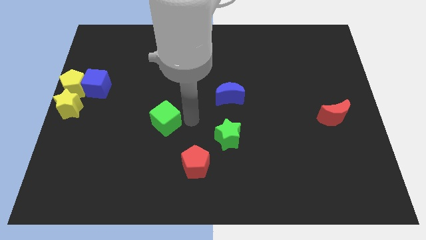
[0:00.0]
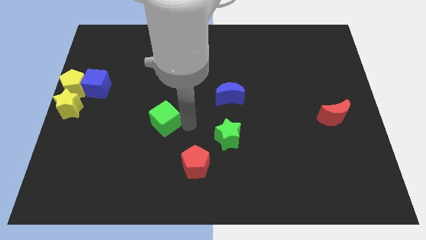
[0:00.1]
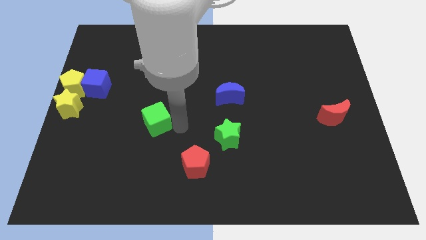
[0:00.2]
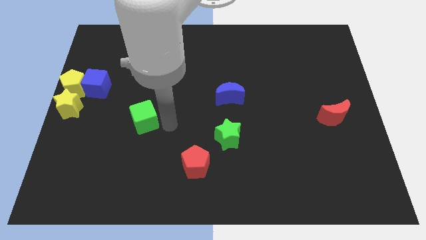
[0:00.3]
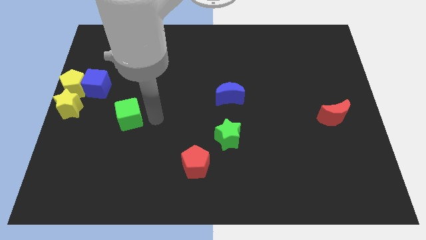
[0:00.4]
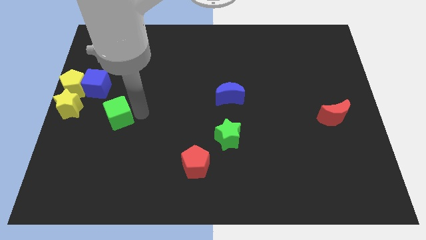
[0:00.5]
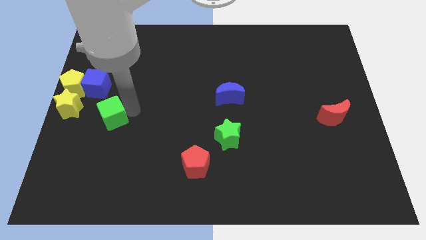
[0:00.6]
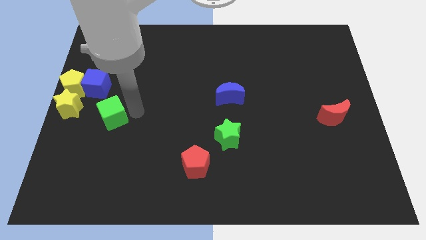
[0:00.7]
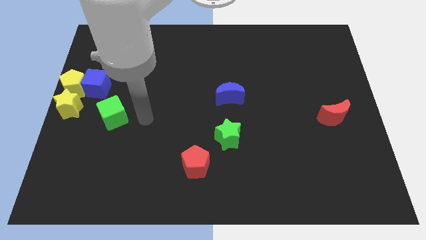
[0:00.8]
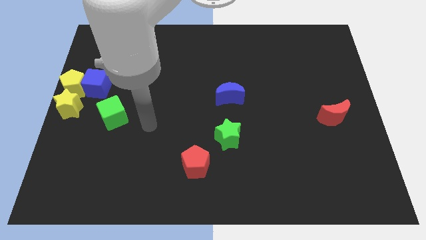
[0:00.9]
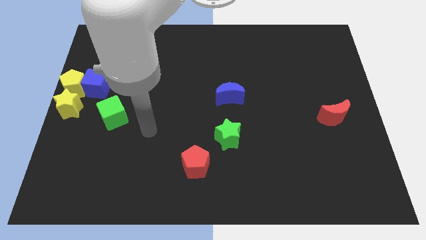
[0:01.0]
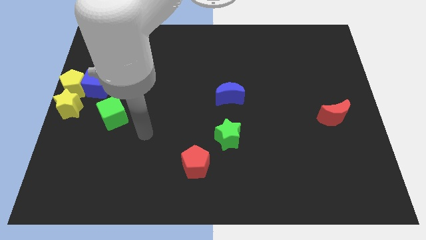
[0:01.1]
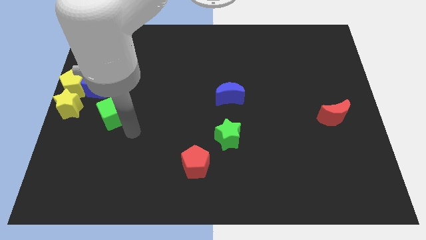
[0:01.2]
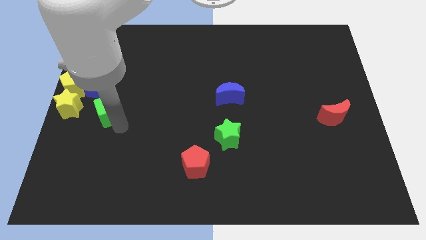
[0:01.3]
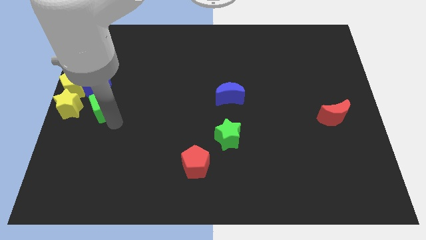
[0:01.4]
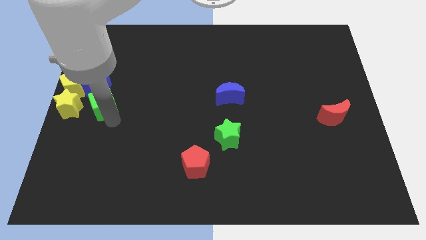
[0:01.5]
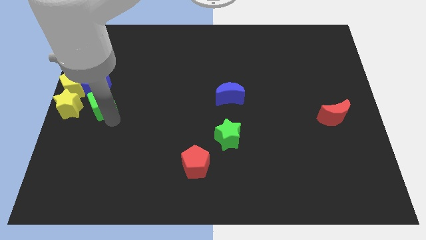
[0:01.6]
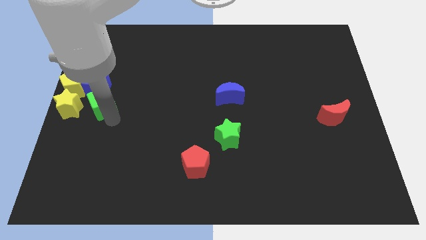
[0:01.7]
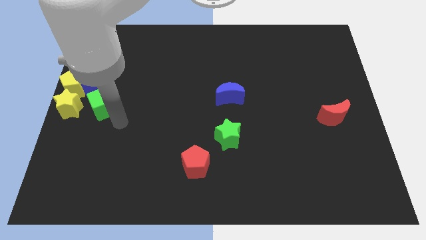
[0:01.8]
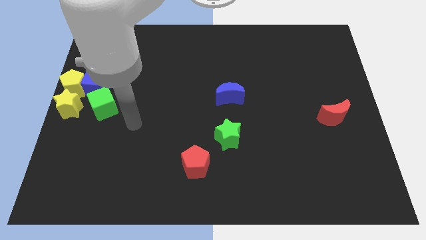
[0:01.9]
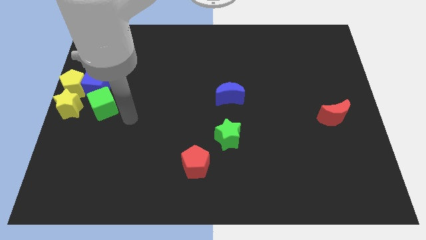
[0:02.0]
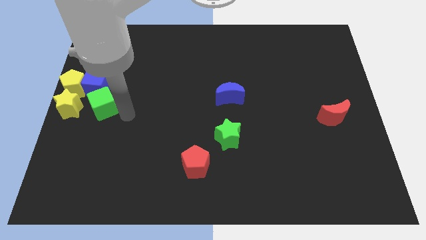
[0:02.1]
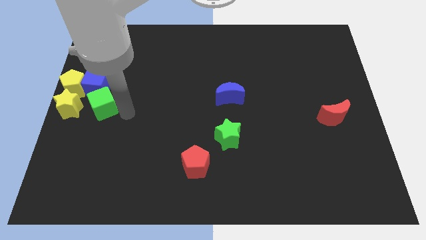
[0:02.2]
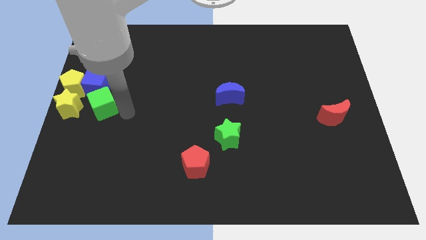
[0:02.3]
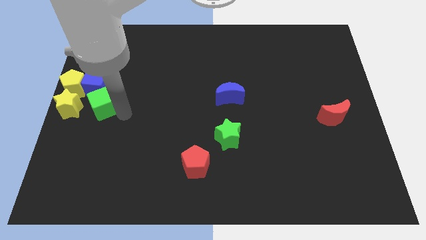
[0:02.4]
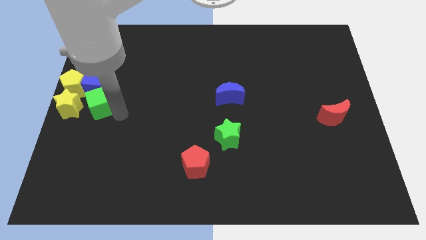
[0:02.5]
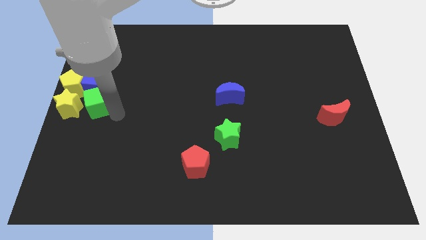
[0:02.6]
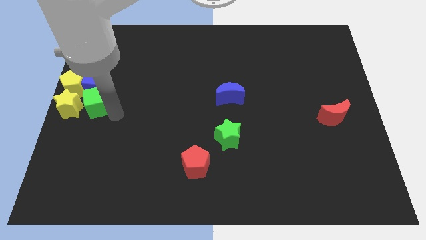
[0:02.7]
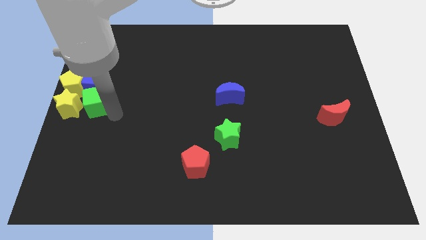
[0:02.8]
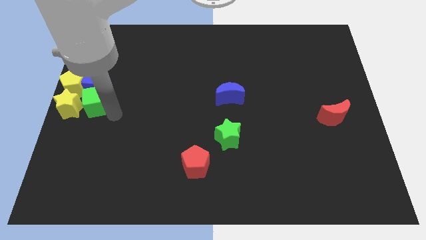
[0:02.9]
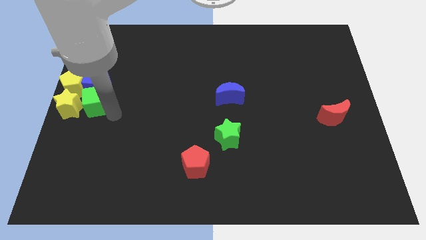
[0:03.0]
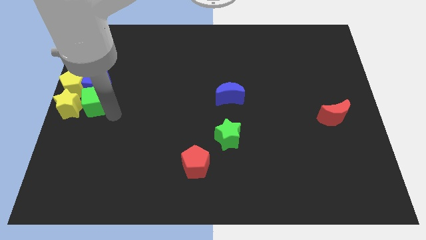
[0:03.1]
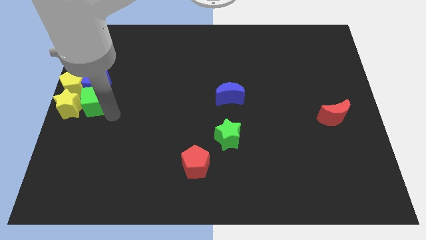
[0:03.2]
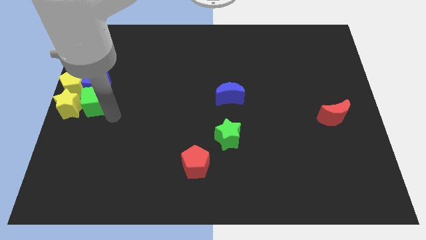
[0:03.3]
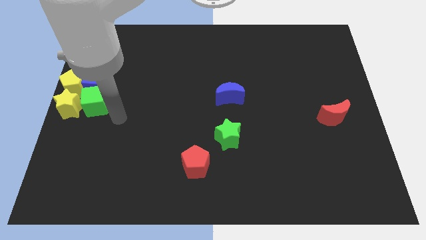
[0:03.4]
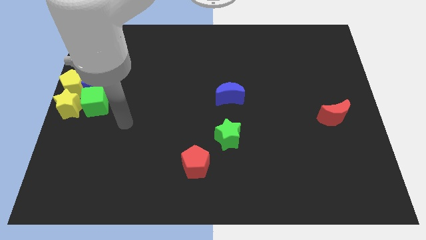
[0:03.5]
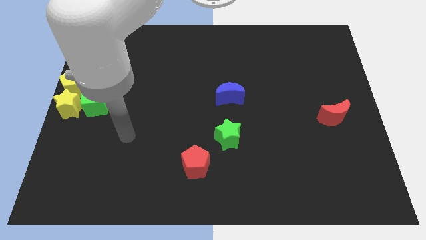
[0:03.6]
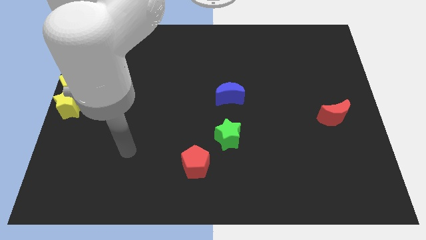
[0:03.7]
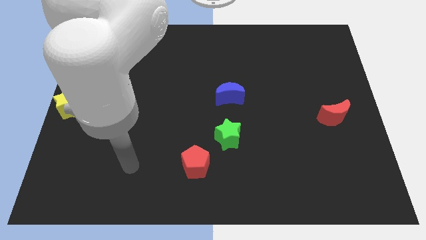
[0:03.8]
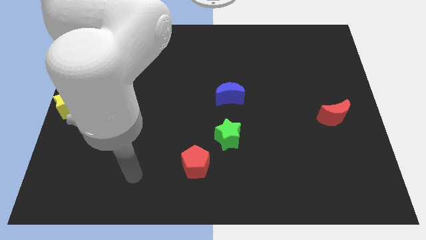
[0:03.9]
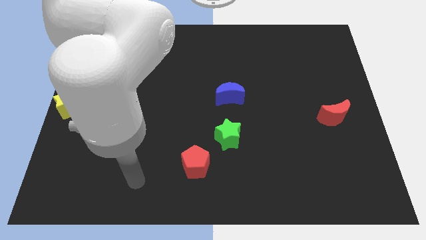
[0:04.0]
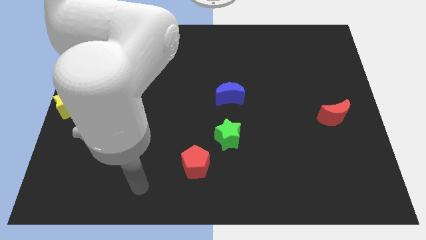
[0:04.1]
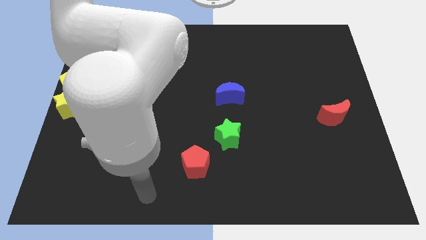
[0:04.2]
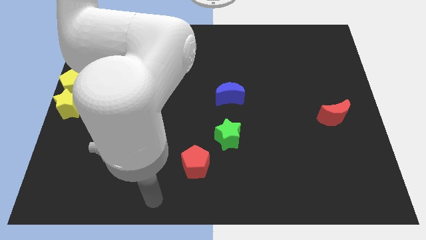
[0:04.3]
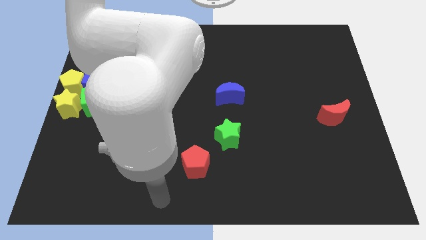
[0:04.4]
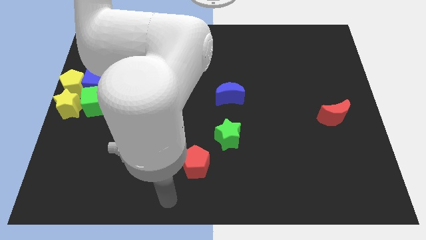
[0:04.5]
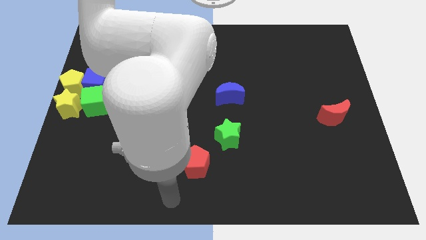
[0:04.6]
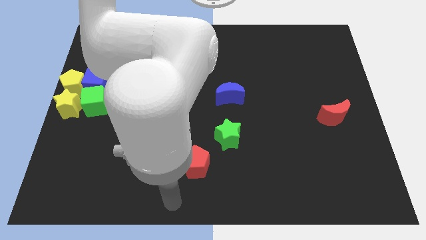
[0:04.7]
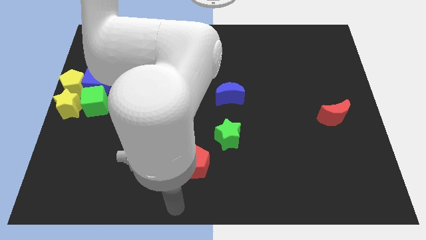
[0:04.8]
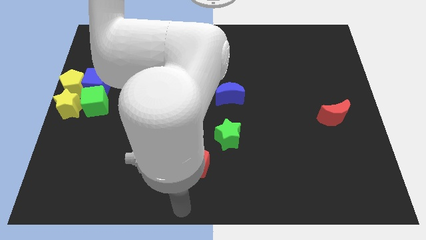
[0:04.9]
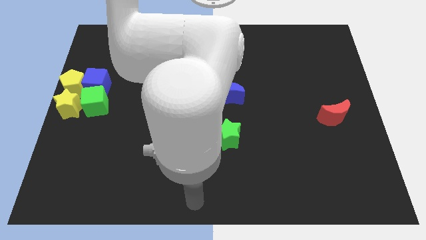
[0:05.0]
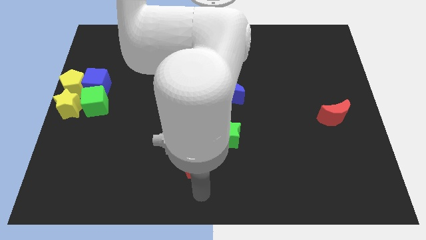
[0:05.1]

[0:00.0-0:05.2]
push the green cube into the yellow star

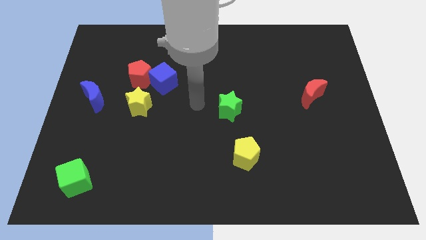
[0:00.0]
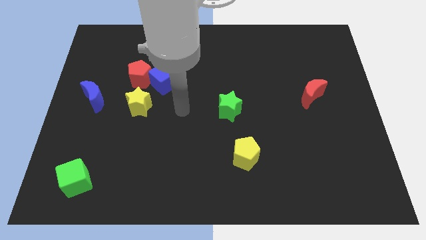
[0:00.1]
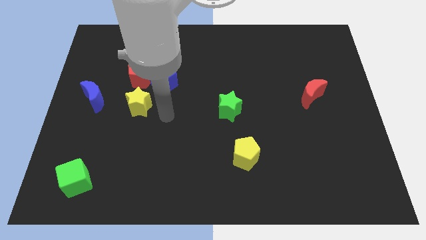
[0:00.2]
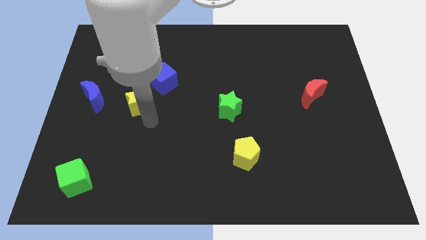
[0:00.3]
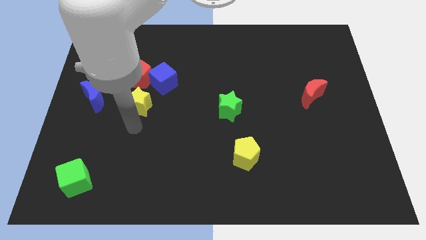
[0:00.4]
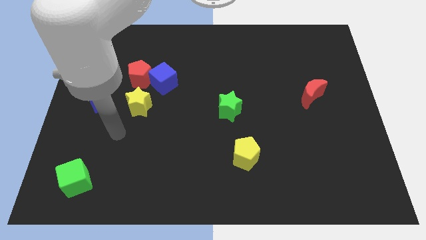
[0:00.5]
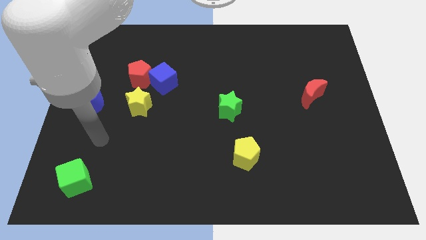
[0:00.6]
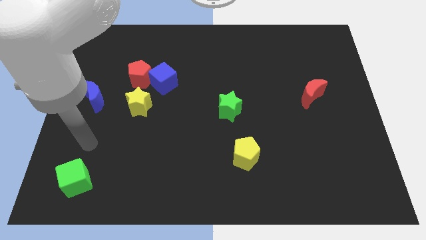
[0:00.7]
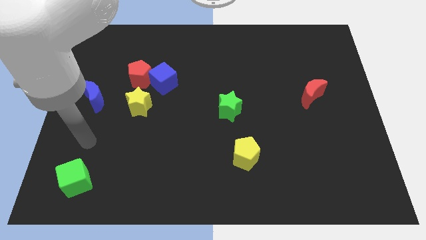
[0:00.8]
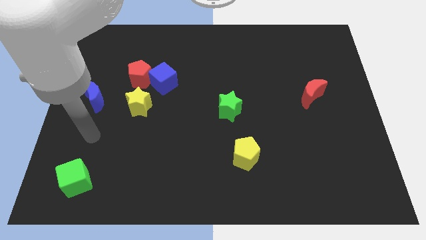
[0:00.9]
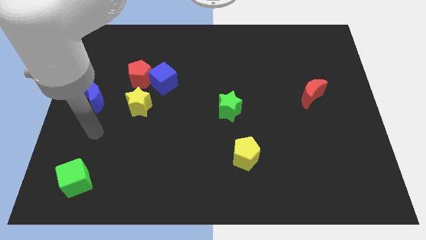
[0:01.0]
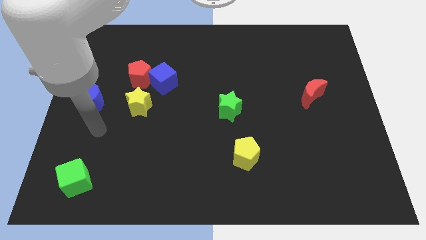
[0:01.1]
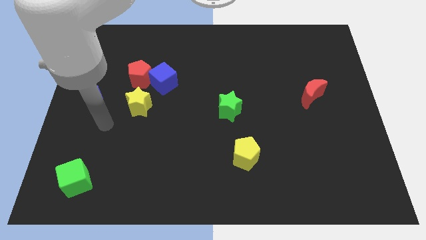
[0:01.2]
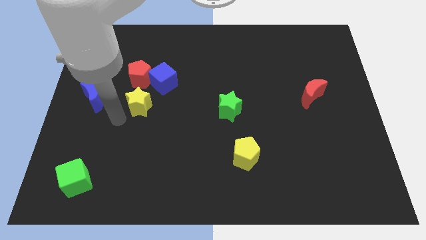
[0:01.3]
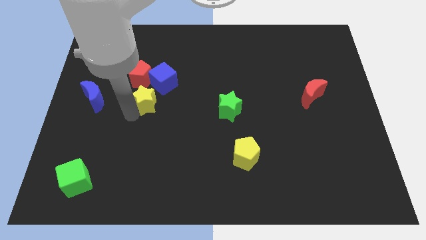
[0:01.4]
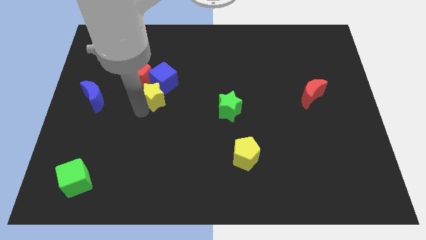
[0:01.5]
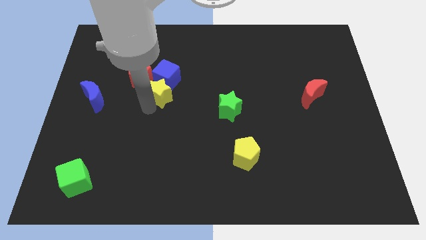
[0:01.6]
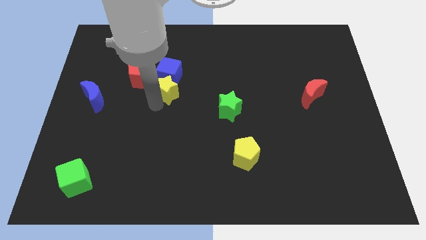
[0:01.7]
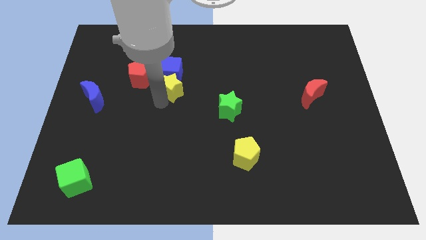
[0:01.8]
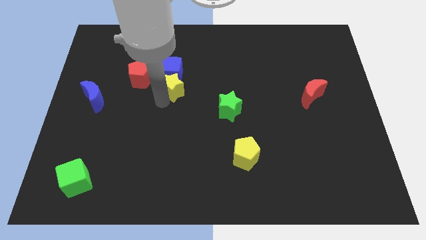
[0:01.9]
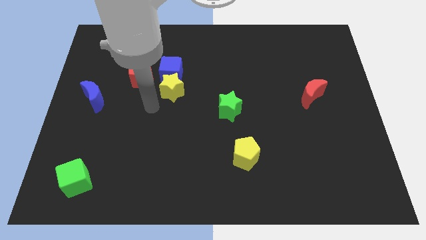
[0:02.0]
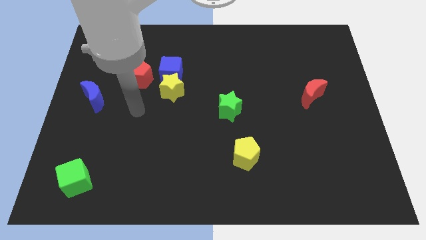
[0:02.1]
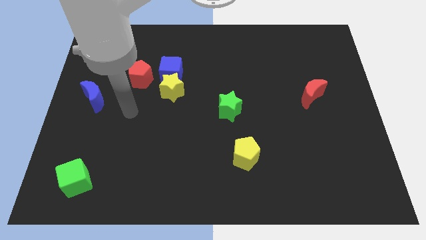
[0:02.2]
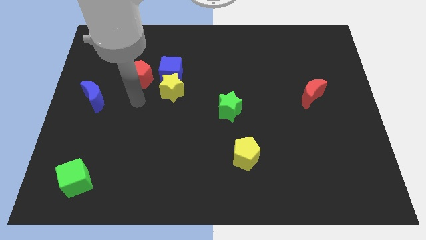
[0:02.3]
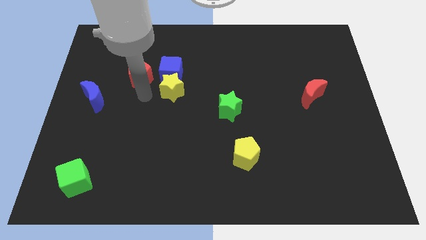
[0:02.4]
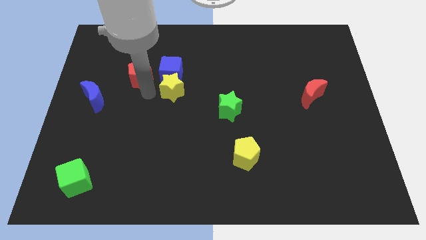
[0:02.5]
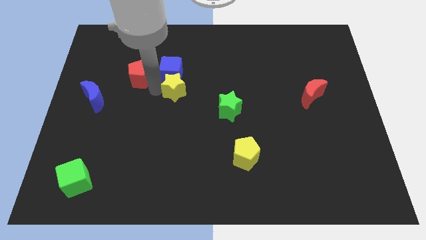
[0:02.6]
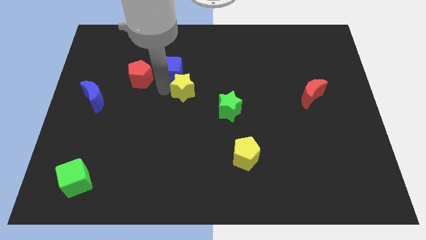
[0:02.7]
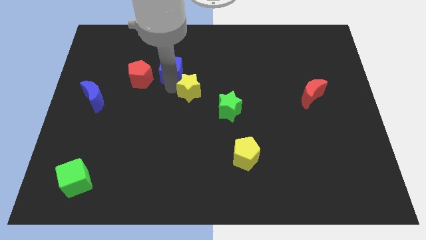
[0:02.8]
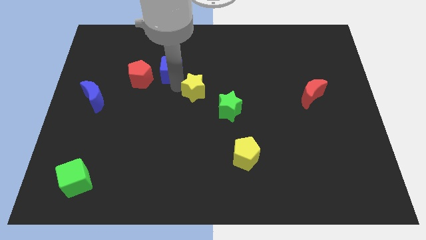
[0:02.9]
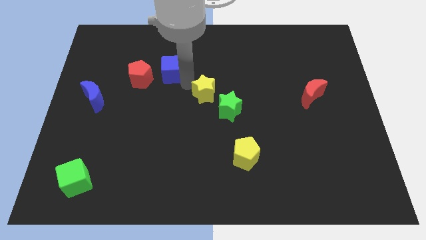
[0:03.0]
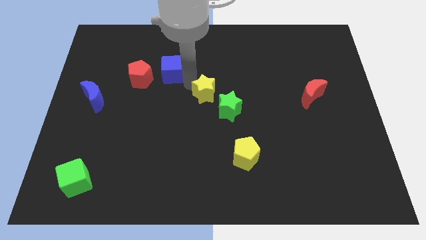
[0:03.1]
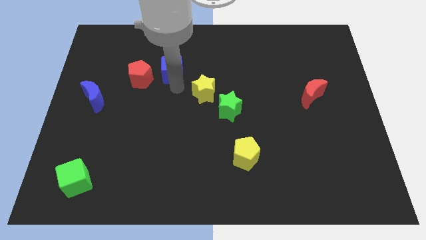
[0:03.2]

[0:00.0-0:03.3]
place the yellow star in between blue cube and green star

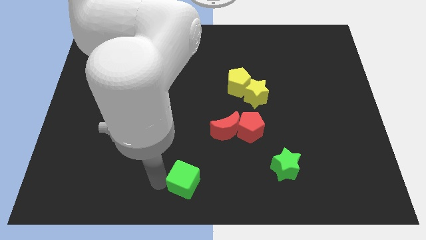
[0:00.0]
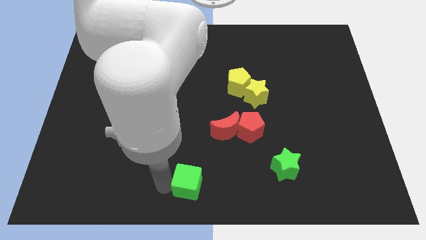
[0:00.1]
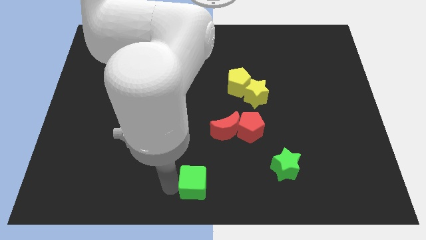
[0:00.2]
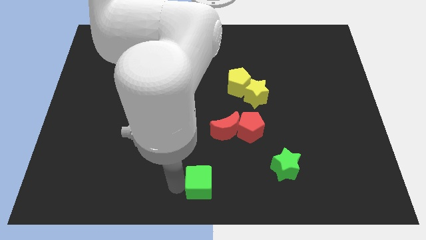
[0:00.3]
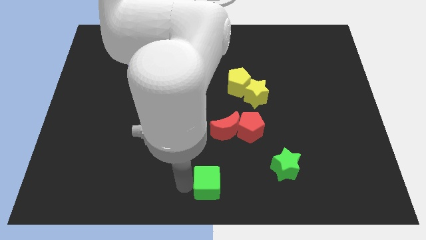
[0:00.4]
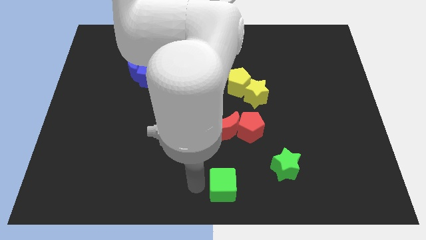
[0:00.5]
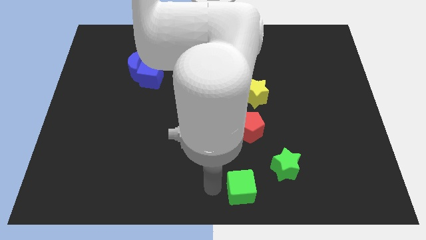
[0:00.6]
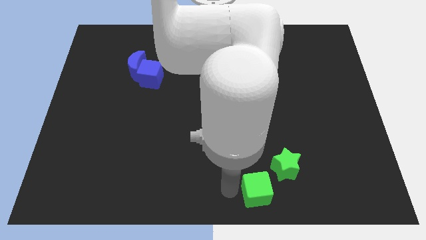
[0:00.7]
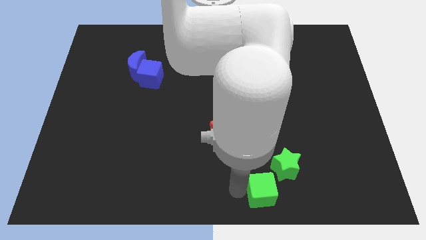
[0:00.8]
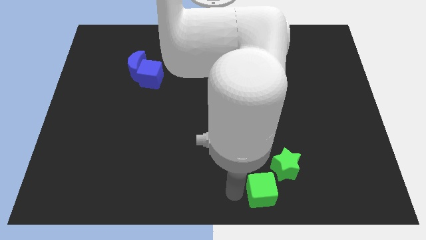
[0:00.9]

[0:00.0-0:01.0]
place the green cube diagonally left of the green star
